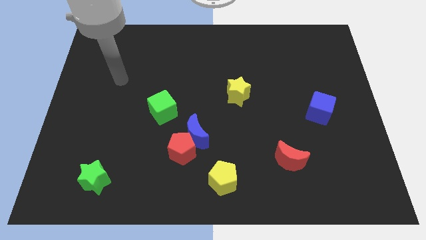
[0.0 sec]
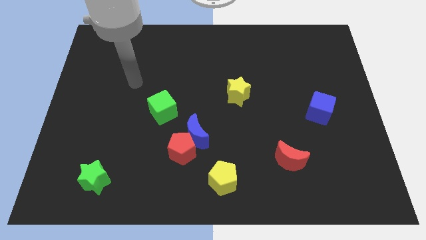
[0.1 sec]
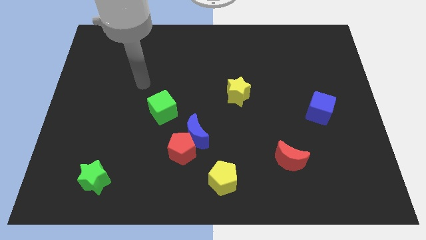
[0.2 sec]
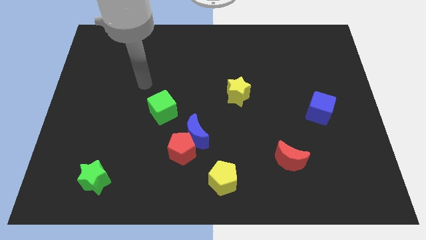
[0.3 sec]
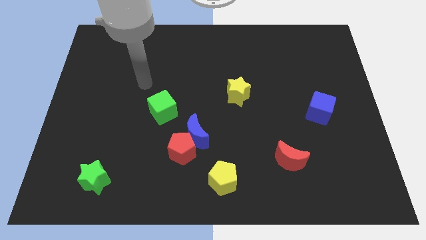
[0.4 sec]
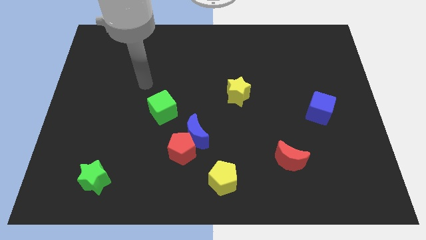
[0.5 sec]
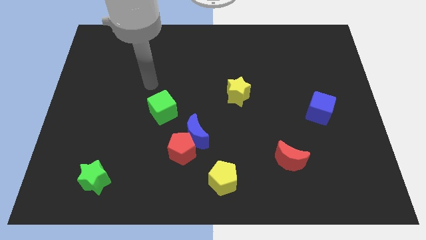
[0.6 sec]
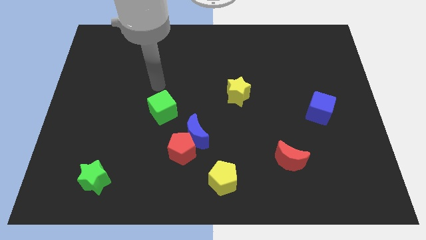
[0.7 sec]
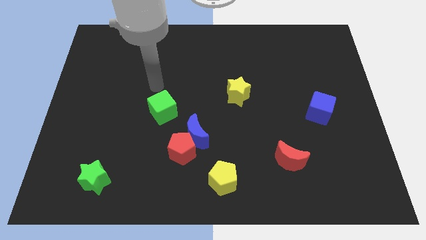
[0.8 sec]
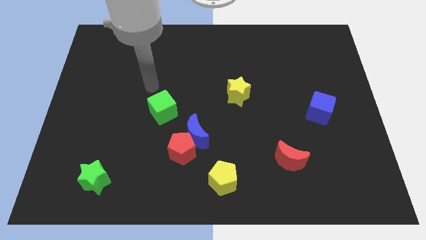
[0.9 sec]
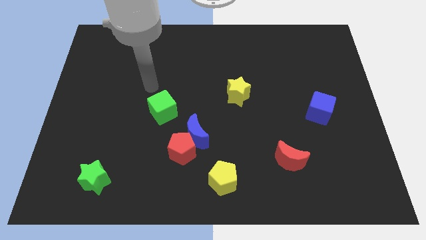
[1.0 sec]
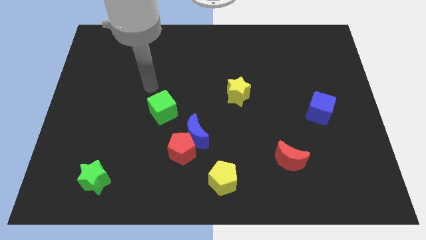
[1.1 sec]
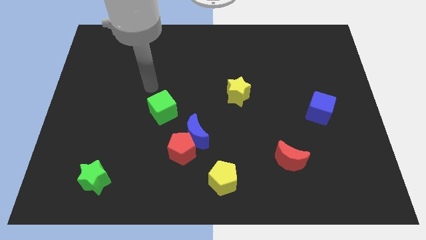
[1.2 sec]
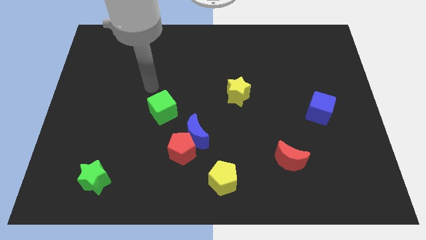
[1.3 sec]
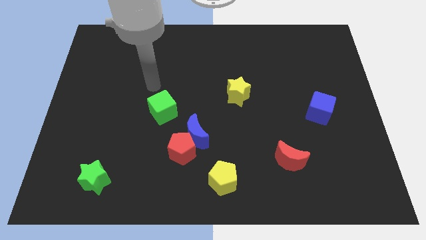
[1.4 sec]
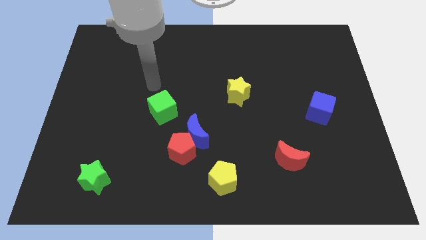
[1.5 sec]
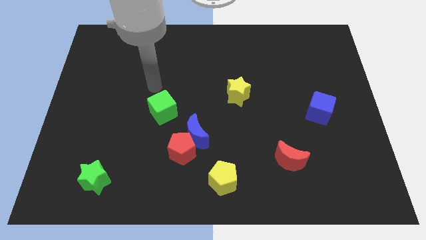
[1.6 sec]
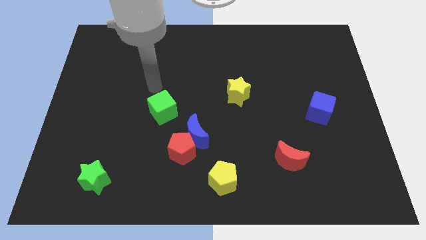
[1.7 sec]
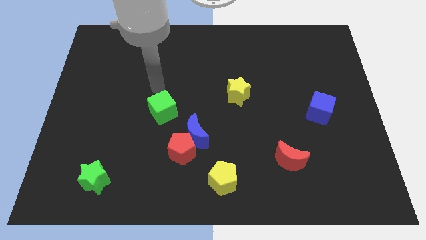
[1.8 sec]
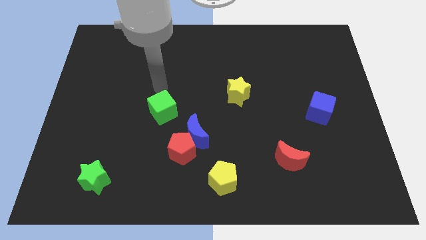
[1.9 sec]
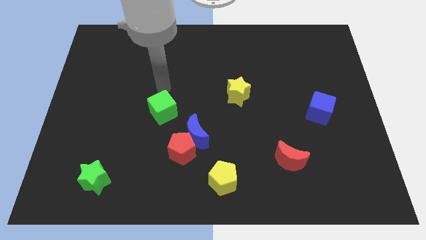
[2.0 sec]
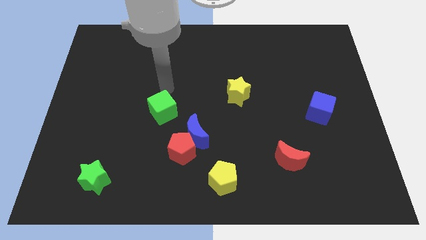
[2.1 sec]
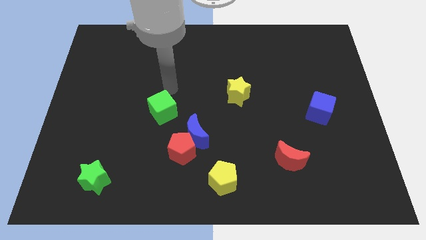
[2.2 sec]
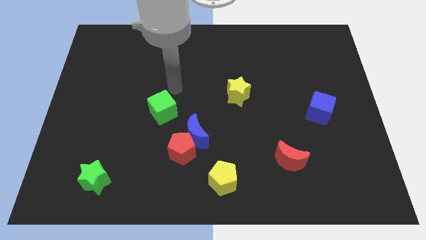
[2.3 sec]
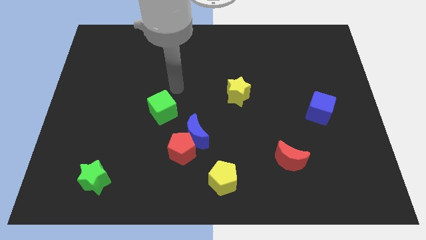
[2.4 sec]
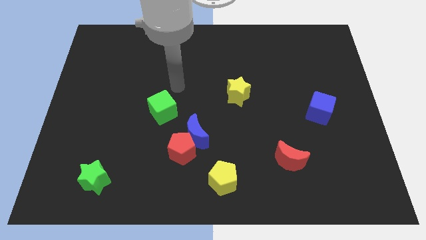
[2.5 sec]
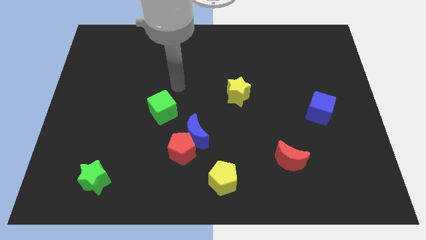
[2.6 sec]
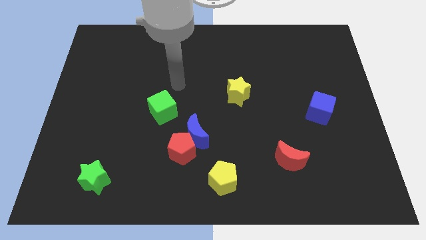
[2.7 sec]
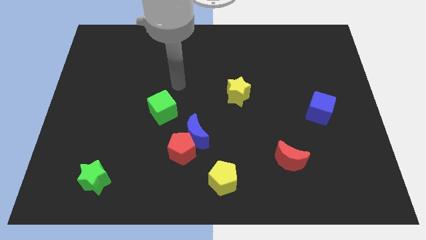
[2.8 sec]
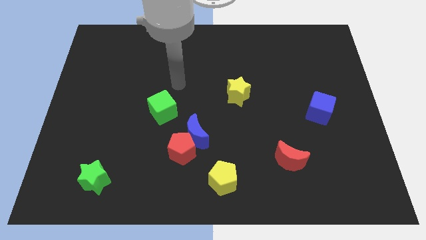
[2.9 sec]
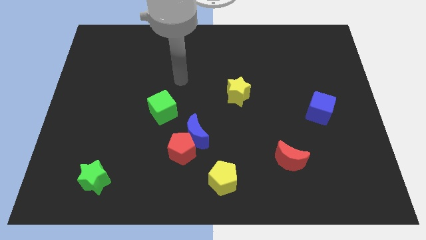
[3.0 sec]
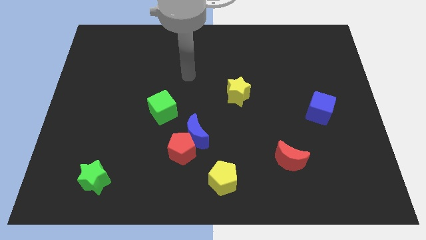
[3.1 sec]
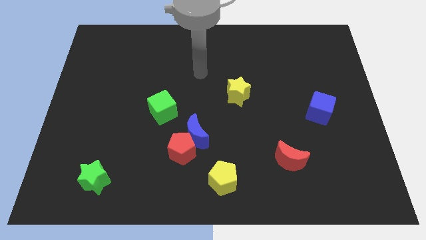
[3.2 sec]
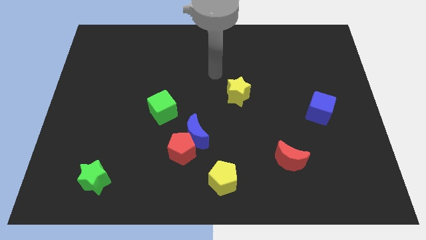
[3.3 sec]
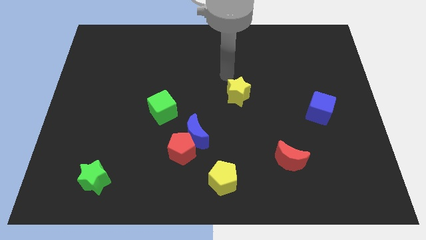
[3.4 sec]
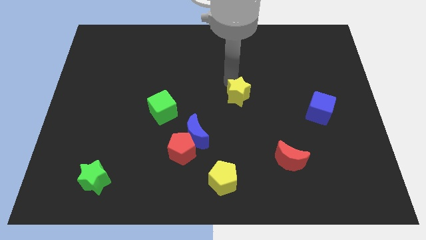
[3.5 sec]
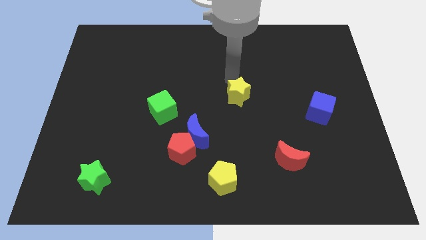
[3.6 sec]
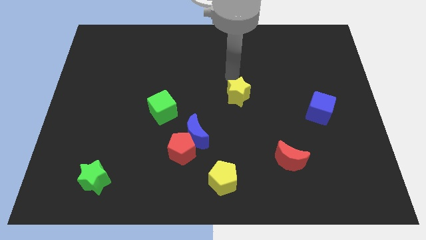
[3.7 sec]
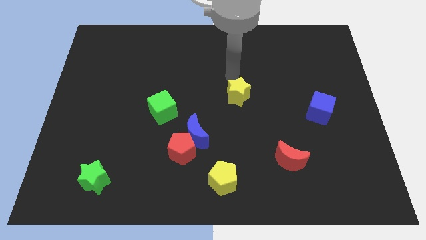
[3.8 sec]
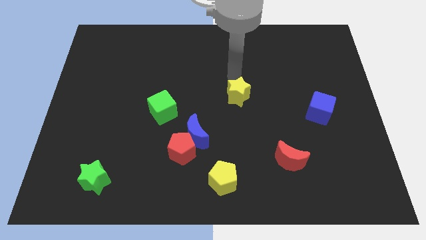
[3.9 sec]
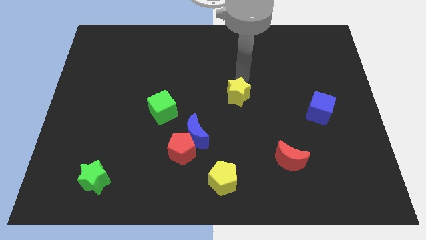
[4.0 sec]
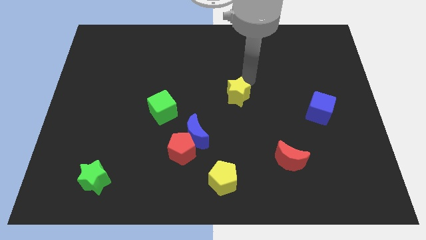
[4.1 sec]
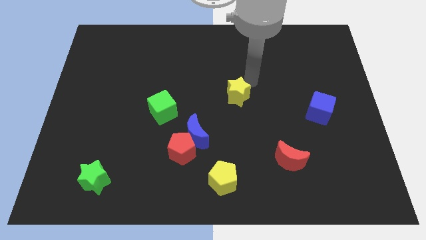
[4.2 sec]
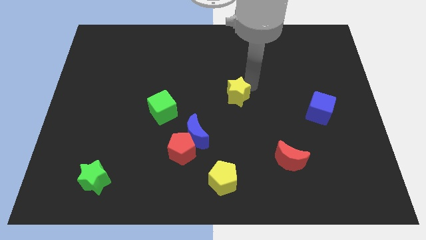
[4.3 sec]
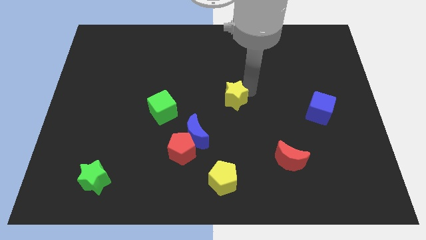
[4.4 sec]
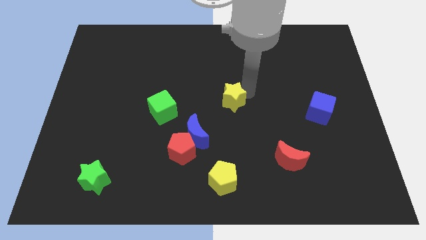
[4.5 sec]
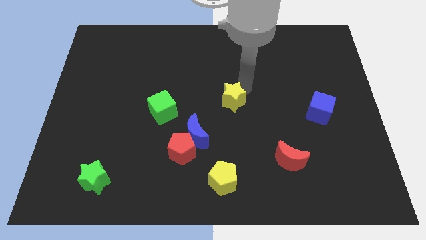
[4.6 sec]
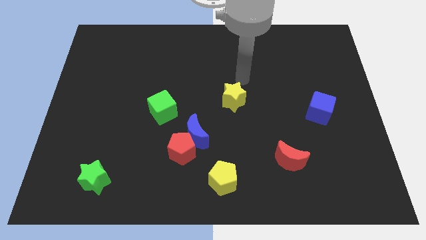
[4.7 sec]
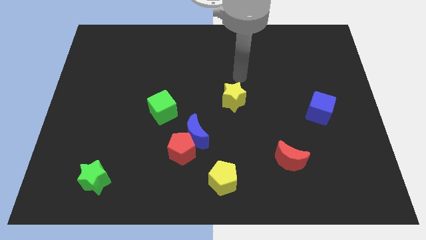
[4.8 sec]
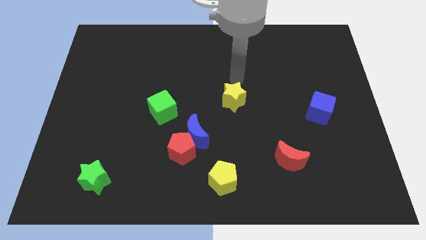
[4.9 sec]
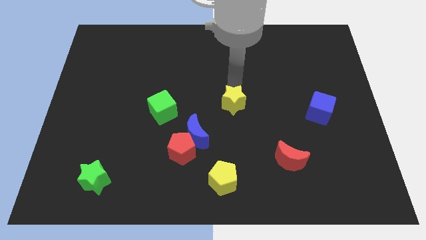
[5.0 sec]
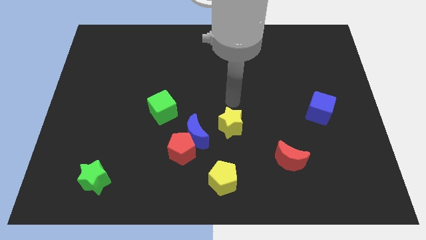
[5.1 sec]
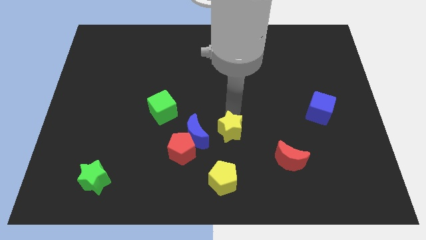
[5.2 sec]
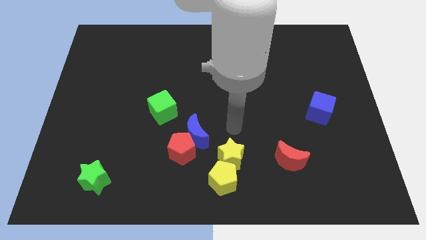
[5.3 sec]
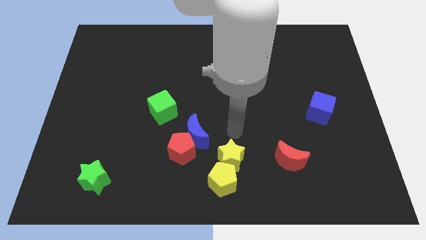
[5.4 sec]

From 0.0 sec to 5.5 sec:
push the yellow star into the yellow pentagon

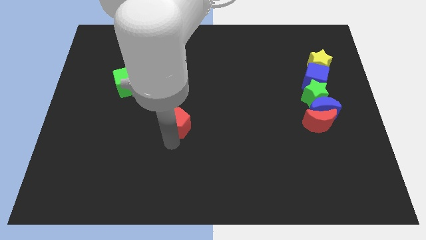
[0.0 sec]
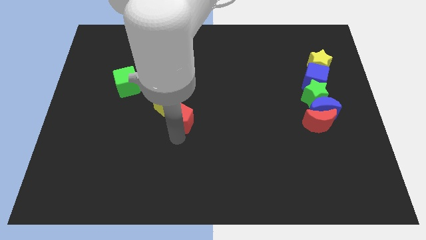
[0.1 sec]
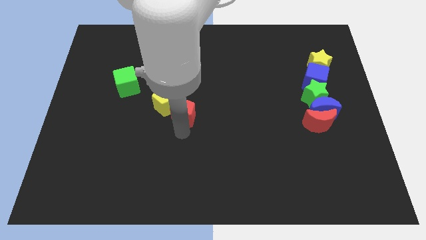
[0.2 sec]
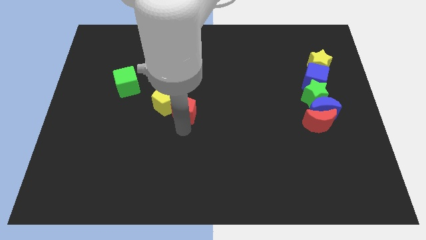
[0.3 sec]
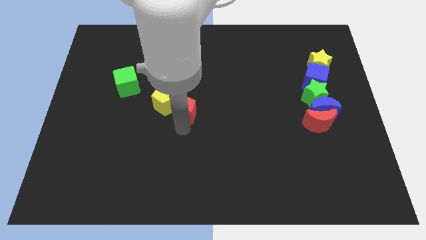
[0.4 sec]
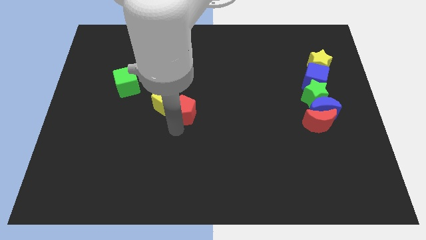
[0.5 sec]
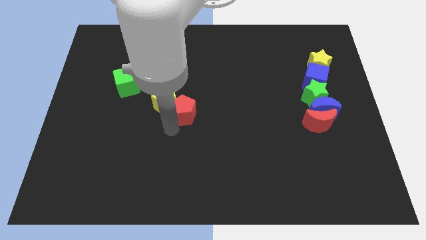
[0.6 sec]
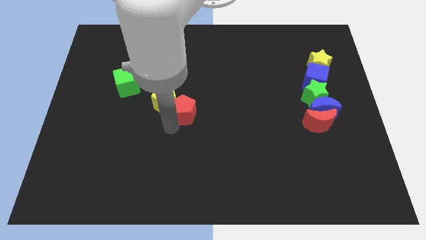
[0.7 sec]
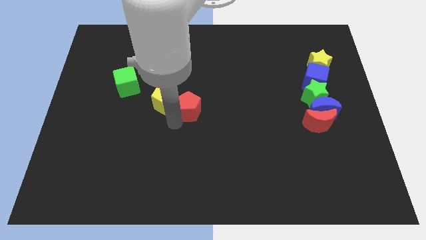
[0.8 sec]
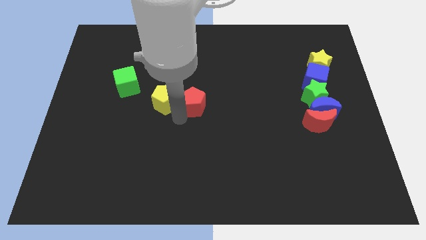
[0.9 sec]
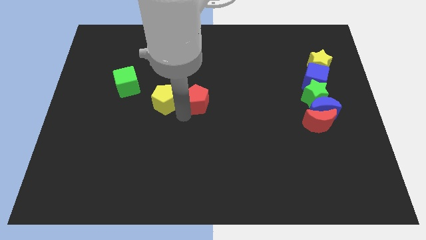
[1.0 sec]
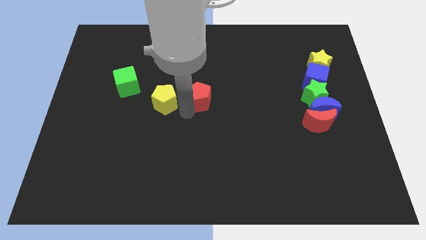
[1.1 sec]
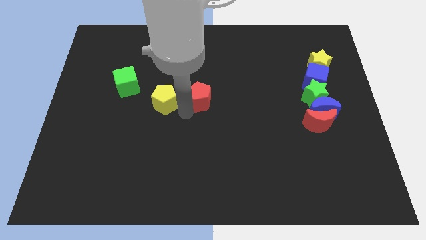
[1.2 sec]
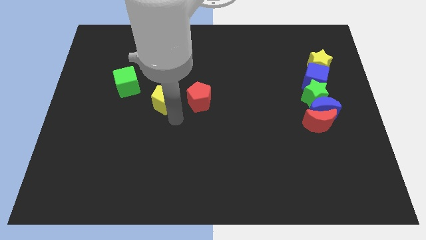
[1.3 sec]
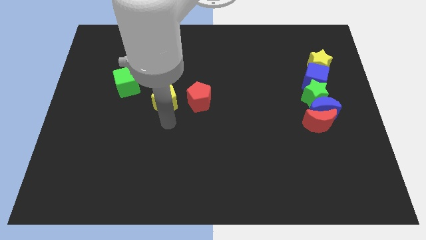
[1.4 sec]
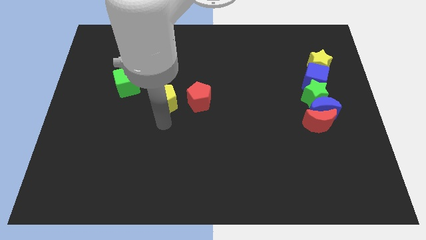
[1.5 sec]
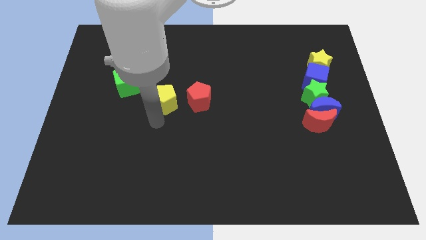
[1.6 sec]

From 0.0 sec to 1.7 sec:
push the red penatgon towards right to the yellow pentagon

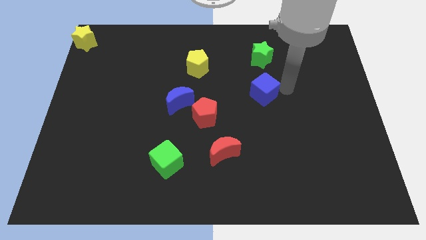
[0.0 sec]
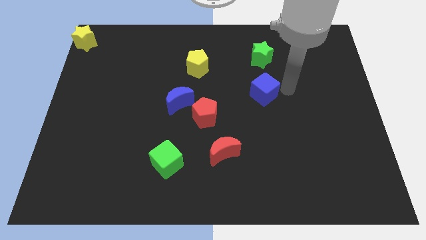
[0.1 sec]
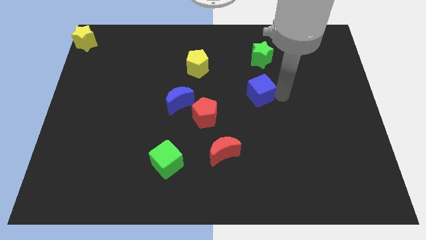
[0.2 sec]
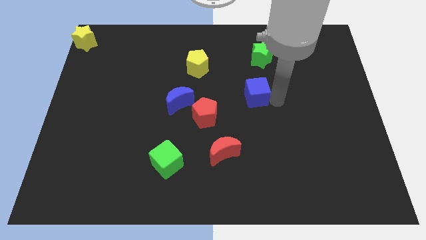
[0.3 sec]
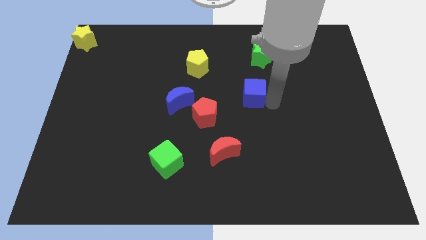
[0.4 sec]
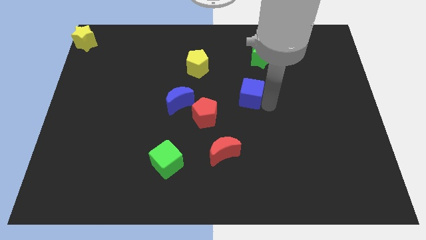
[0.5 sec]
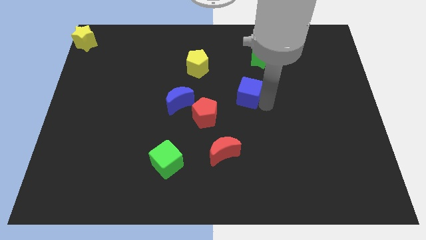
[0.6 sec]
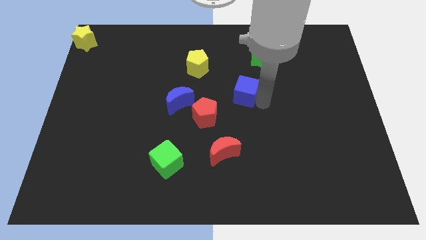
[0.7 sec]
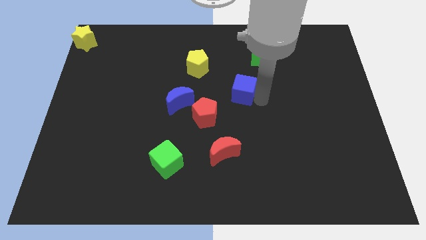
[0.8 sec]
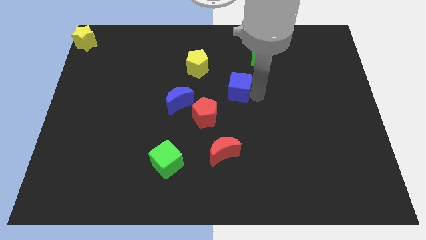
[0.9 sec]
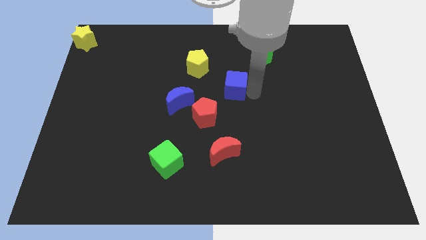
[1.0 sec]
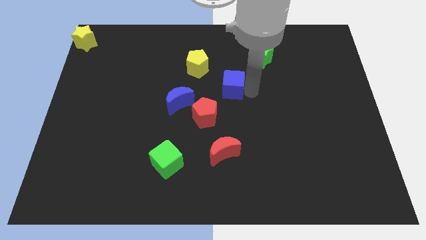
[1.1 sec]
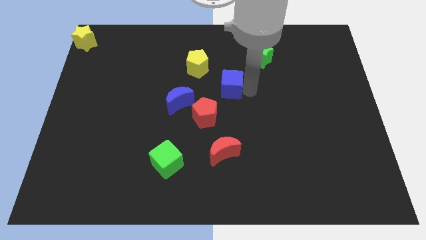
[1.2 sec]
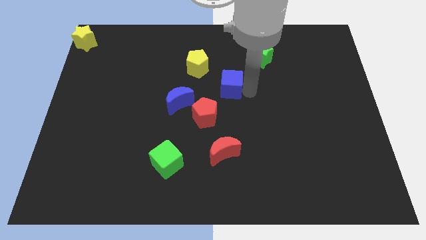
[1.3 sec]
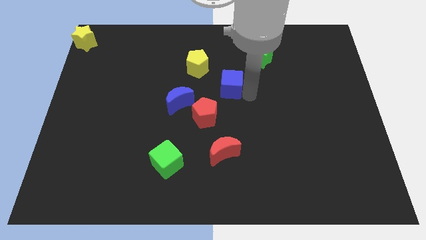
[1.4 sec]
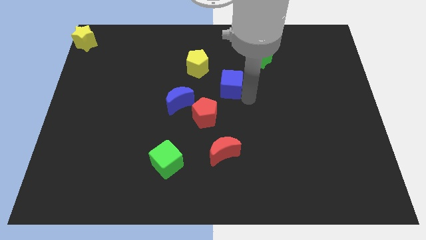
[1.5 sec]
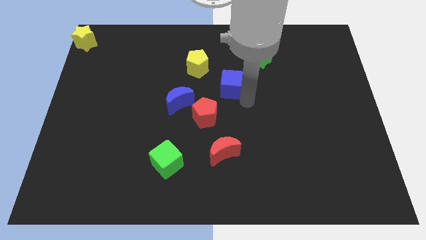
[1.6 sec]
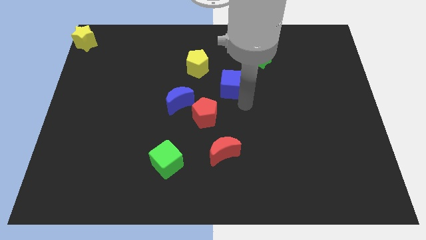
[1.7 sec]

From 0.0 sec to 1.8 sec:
put the blue cube diagonally in between the red pentagon and the green star
